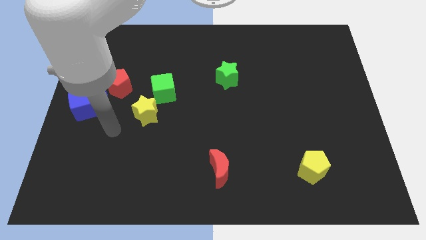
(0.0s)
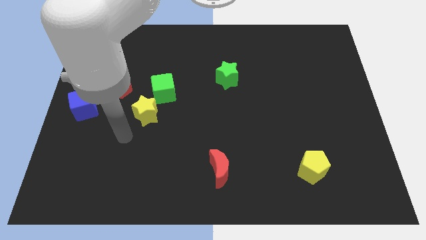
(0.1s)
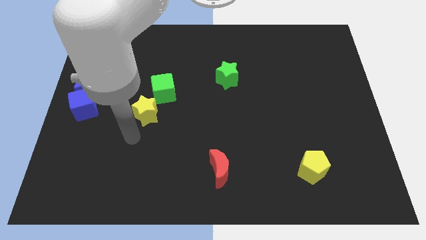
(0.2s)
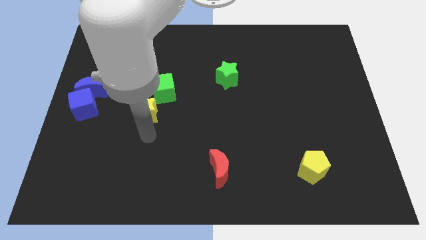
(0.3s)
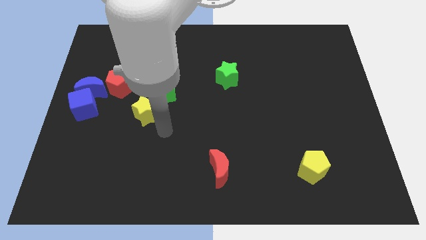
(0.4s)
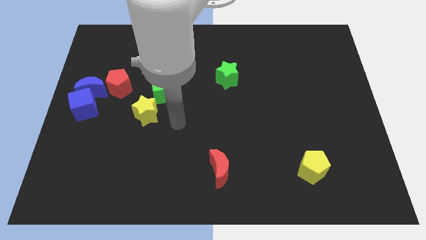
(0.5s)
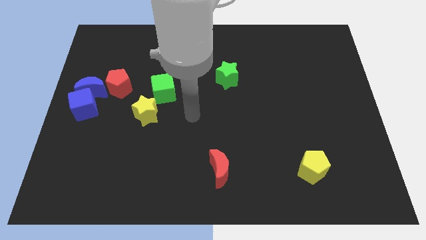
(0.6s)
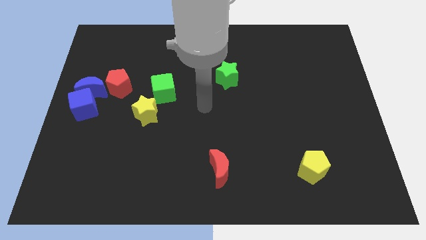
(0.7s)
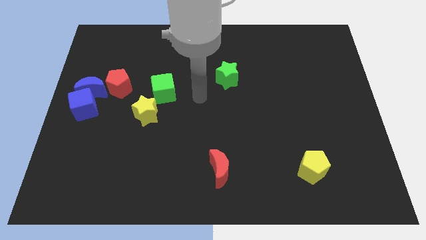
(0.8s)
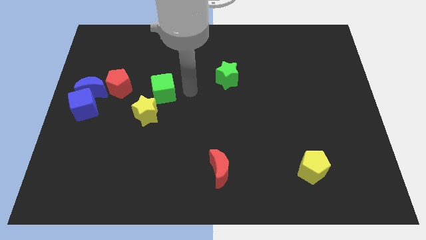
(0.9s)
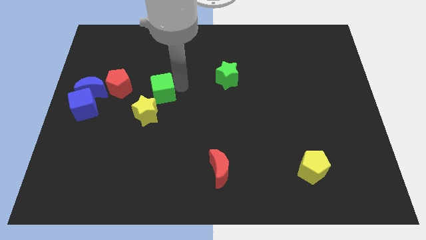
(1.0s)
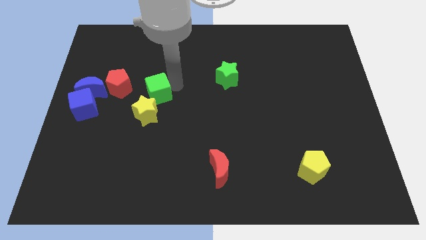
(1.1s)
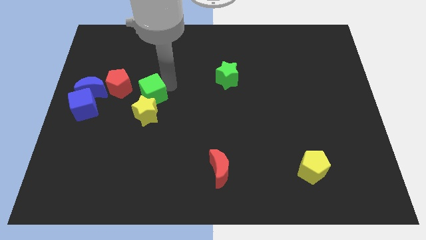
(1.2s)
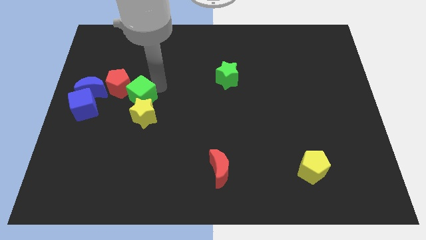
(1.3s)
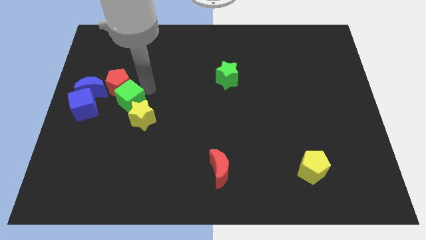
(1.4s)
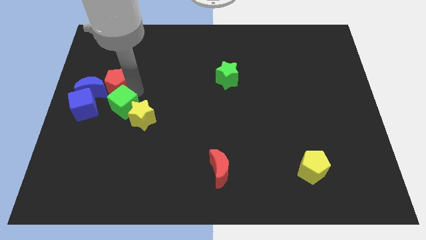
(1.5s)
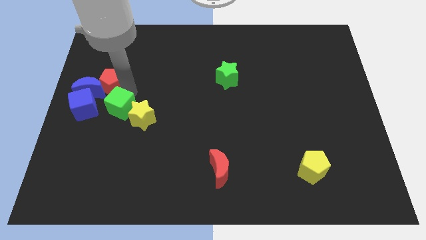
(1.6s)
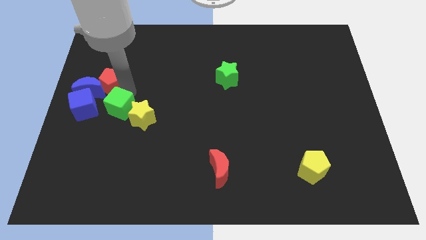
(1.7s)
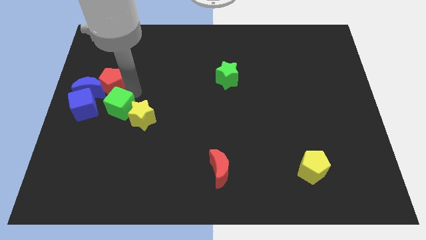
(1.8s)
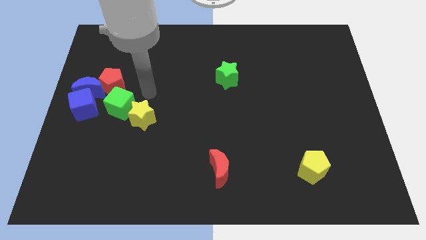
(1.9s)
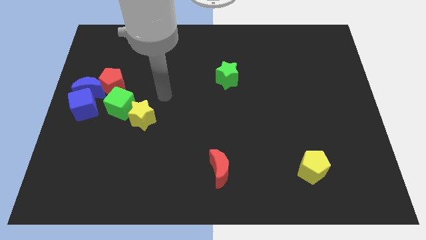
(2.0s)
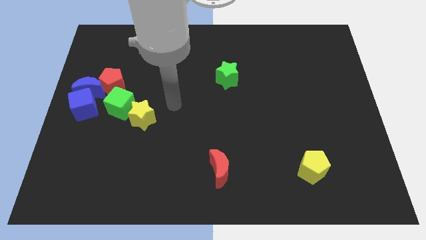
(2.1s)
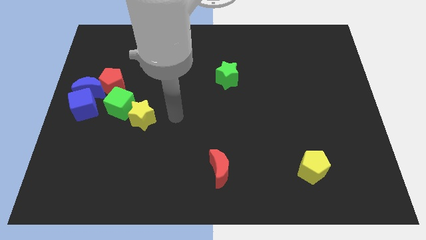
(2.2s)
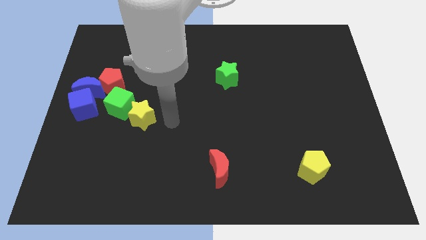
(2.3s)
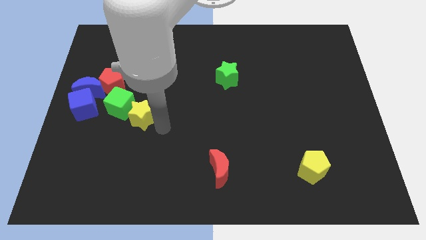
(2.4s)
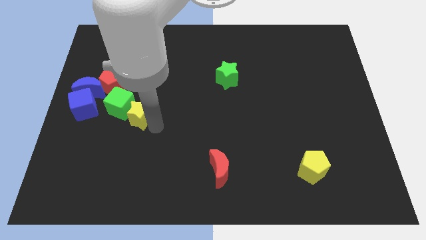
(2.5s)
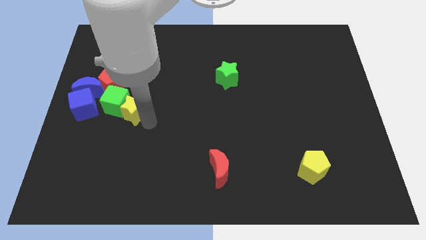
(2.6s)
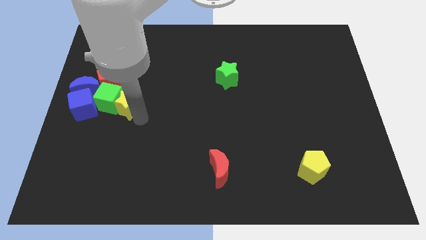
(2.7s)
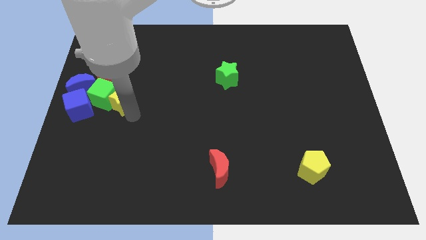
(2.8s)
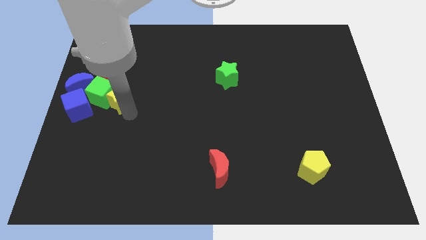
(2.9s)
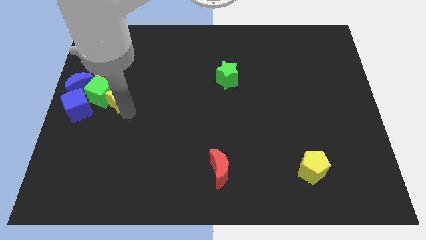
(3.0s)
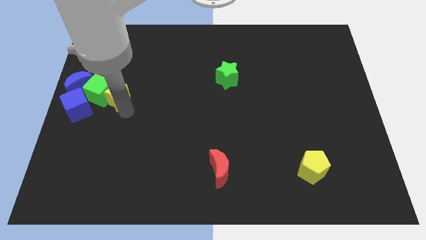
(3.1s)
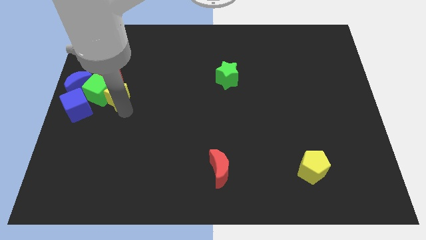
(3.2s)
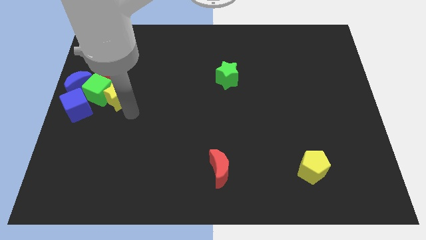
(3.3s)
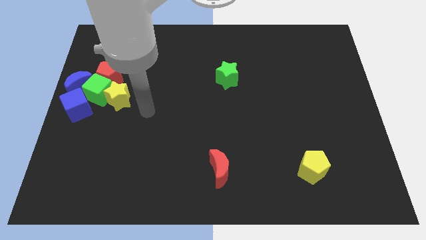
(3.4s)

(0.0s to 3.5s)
move the yellow star and the green cube towards the blue blocks

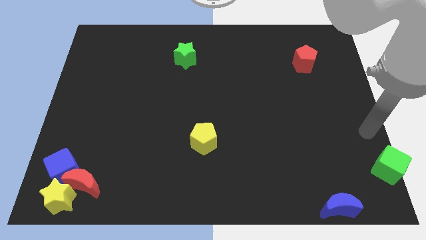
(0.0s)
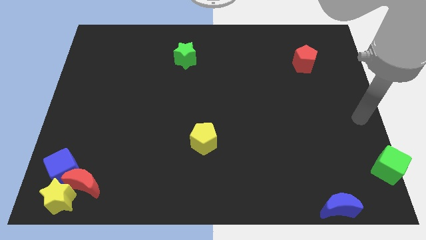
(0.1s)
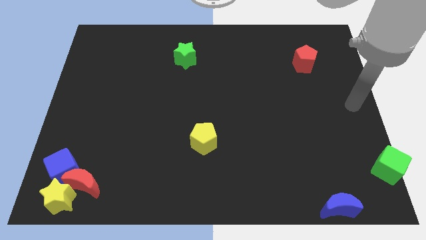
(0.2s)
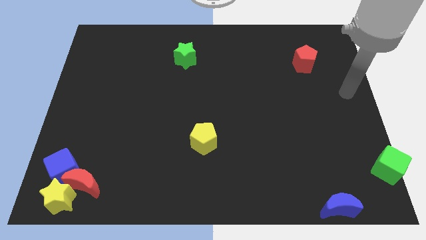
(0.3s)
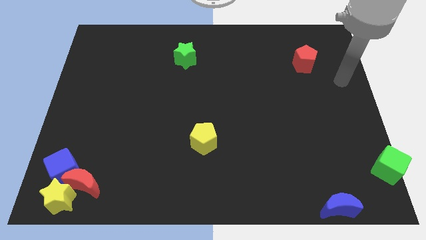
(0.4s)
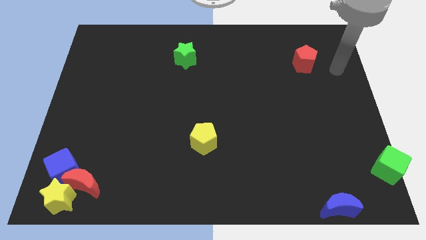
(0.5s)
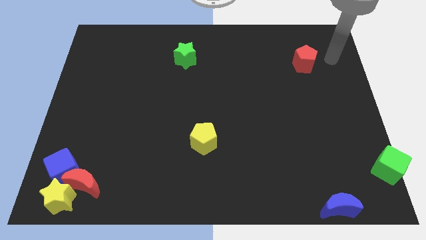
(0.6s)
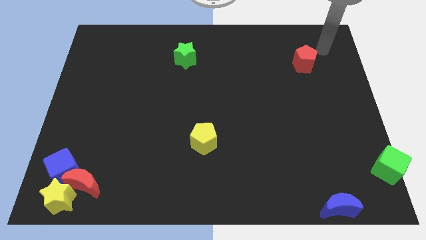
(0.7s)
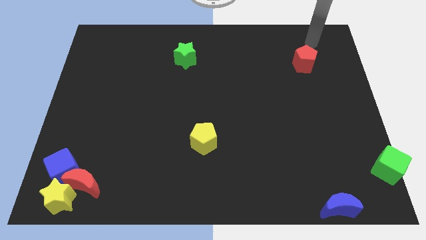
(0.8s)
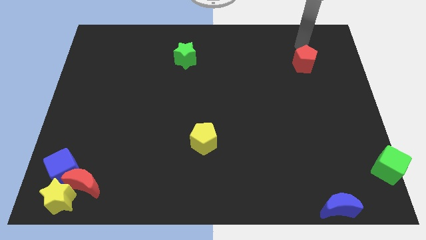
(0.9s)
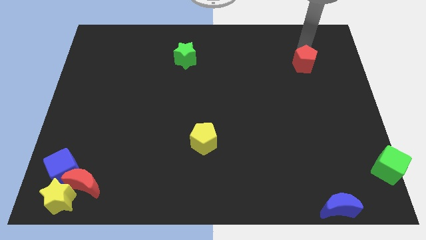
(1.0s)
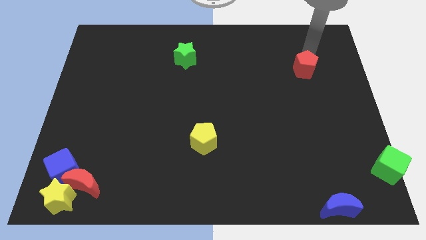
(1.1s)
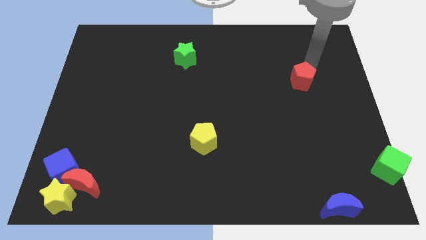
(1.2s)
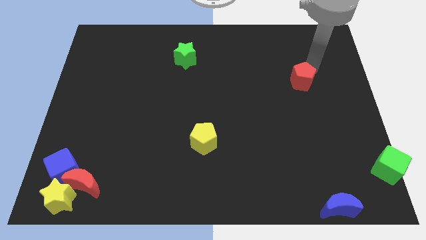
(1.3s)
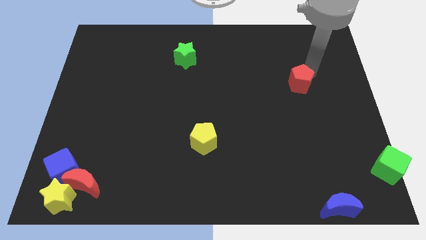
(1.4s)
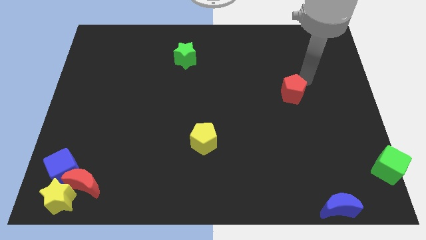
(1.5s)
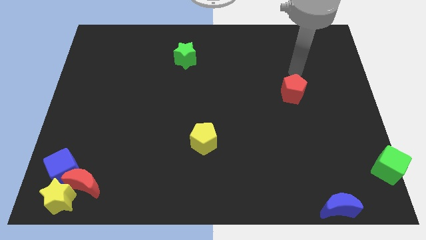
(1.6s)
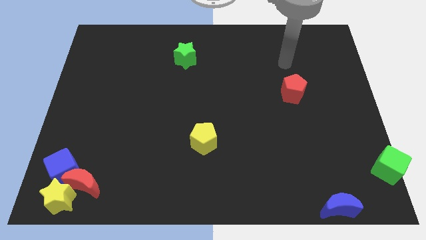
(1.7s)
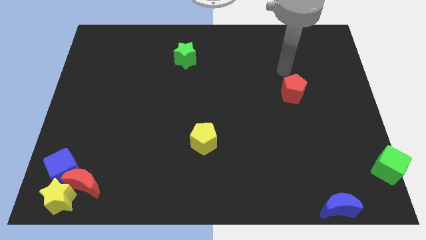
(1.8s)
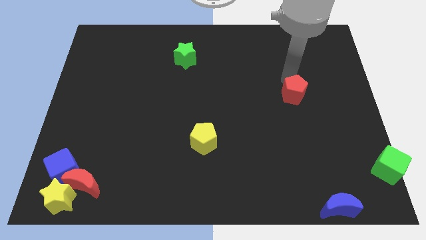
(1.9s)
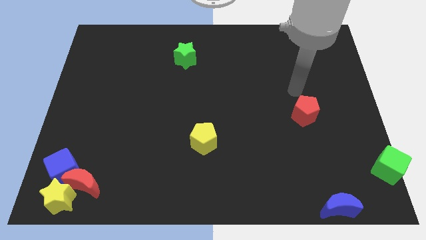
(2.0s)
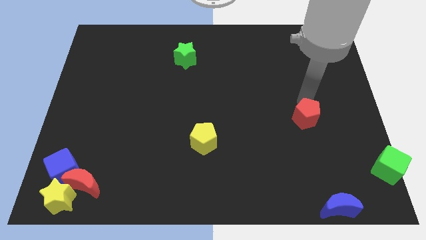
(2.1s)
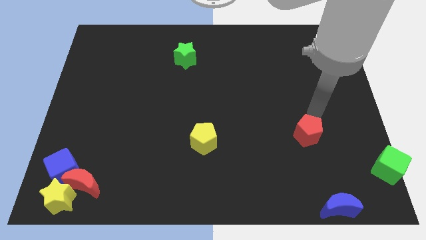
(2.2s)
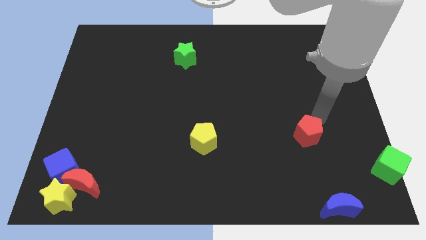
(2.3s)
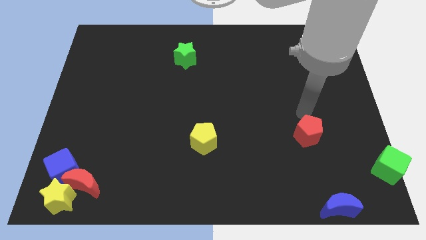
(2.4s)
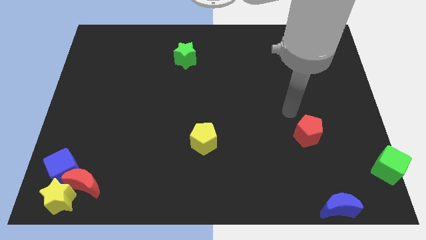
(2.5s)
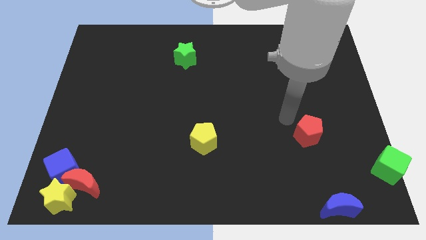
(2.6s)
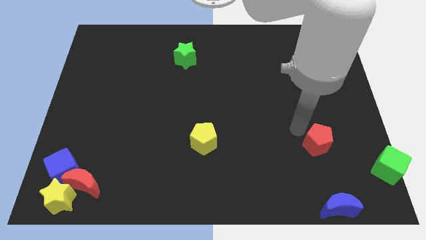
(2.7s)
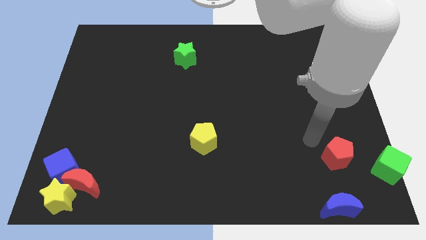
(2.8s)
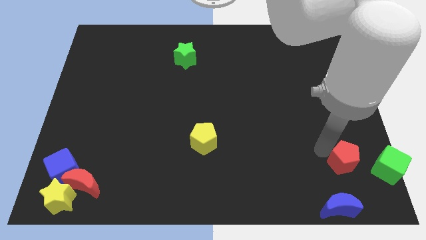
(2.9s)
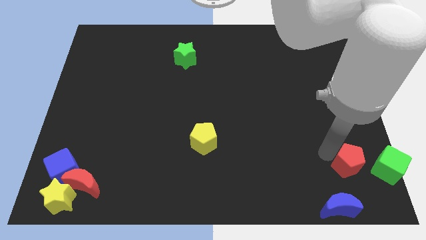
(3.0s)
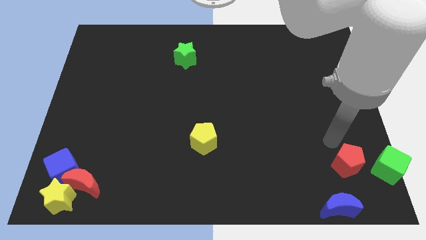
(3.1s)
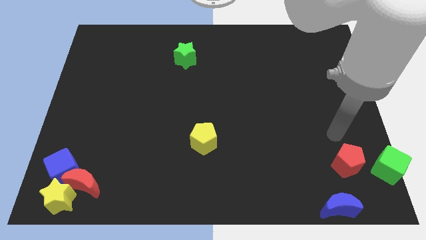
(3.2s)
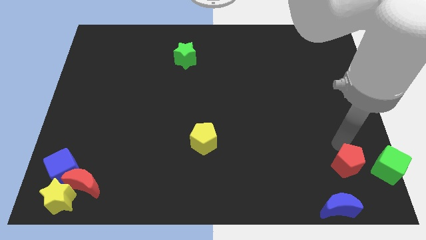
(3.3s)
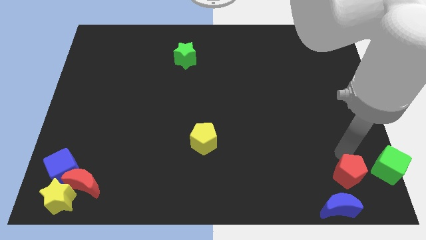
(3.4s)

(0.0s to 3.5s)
push the red pentagon to the left side of the green cube

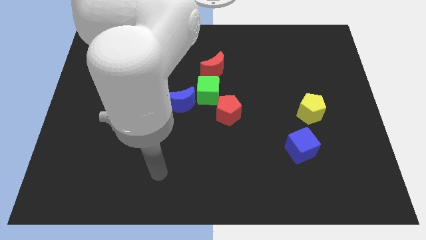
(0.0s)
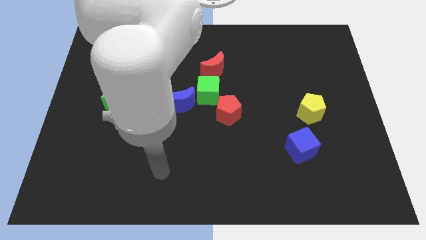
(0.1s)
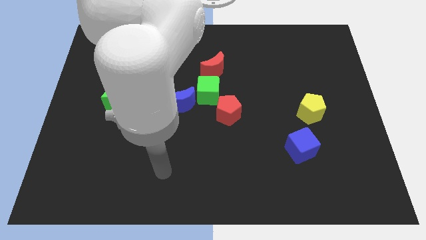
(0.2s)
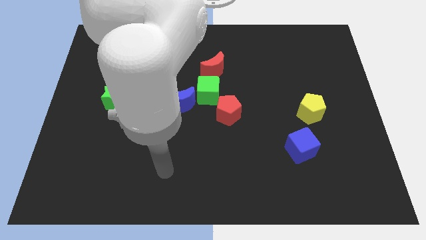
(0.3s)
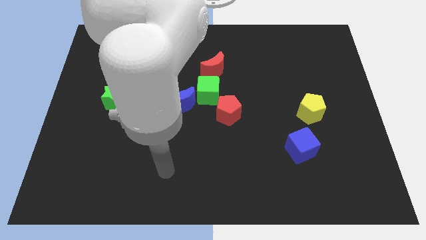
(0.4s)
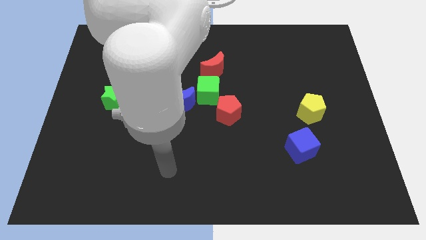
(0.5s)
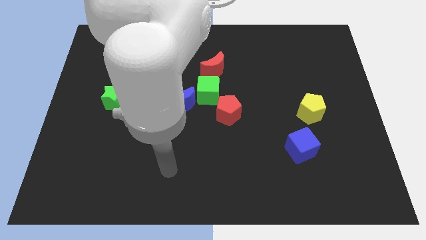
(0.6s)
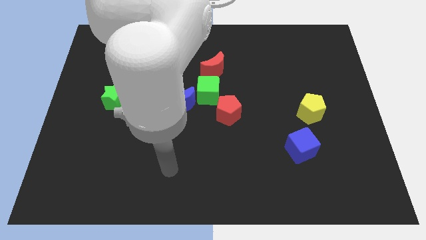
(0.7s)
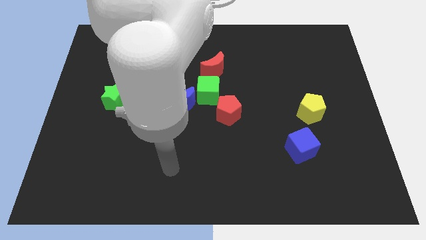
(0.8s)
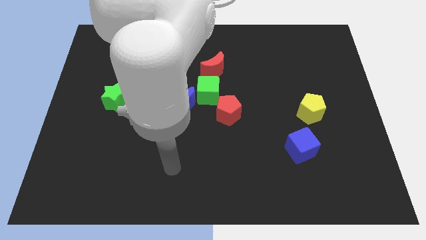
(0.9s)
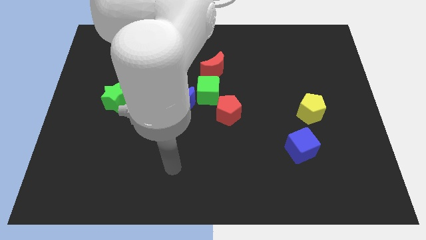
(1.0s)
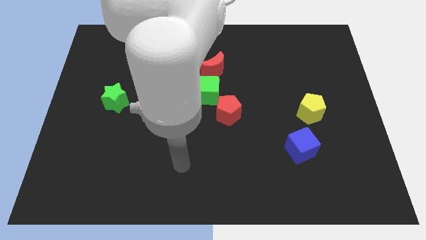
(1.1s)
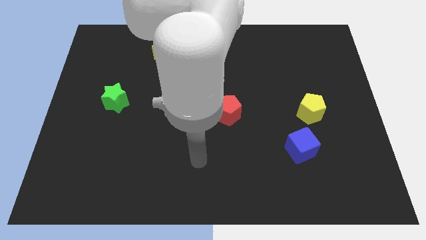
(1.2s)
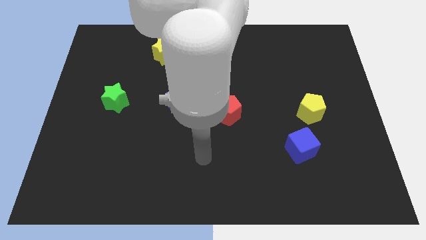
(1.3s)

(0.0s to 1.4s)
move arm to right side diagonal towards the top side

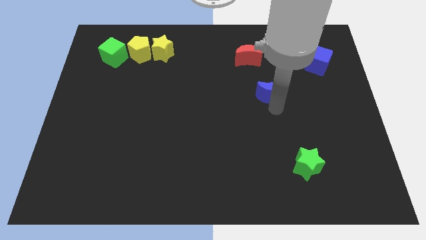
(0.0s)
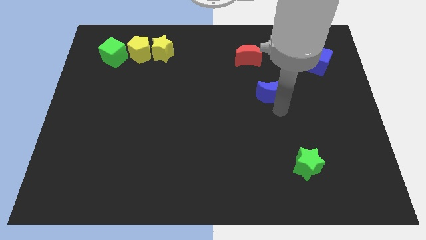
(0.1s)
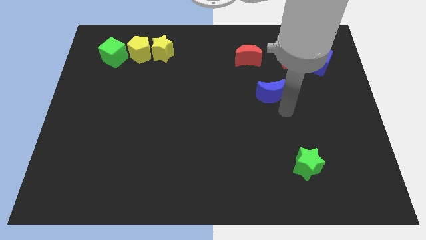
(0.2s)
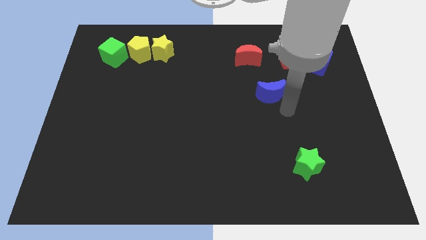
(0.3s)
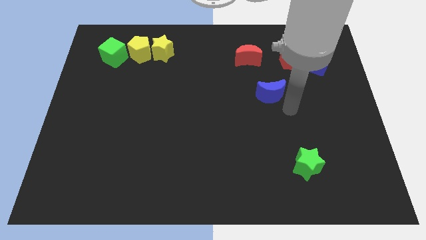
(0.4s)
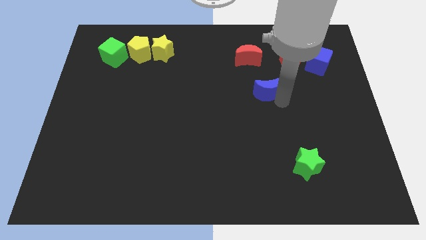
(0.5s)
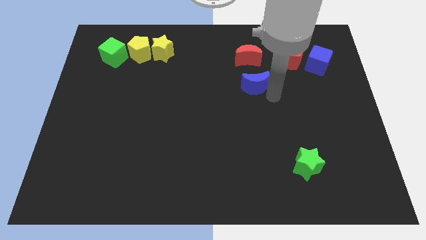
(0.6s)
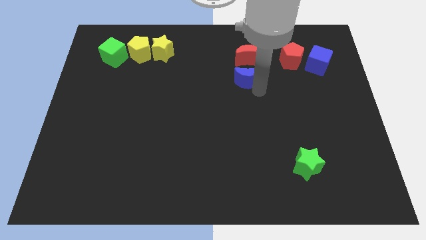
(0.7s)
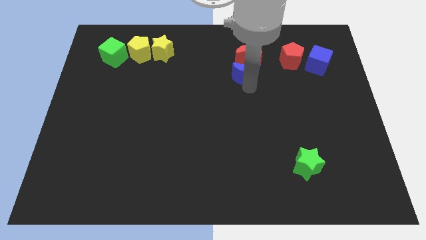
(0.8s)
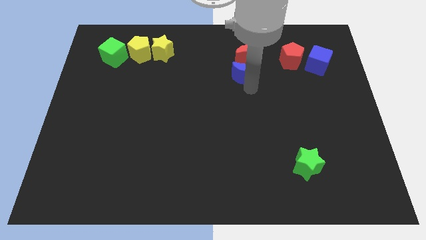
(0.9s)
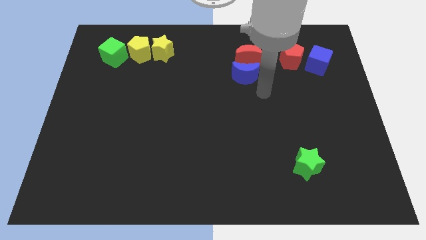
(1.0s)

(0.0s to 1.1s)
move the blue moon below the red moon
